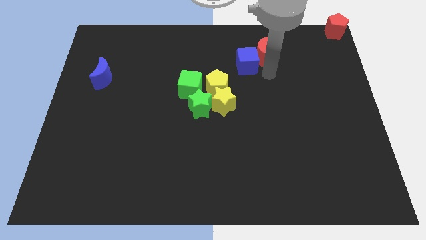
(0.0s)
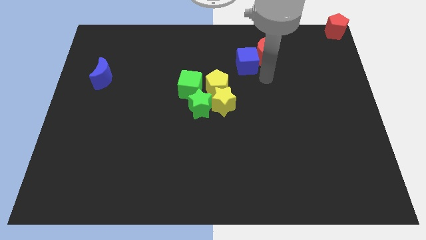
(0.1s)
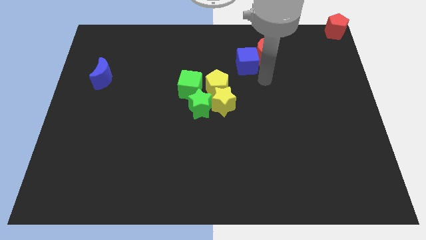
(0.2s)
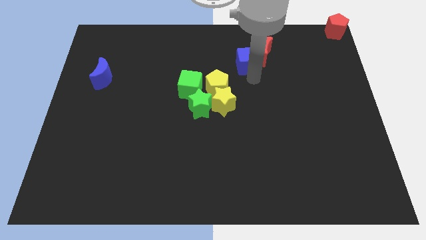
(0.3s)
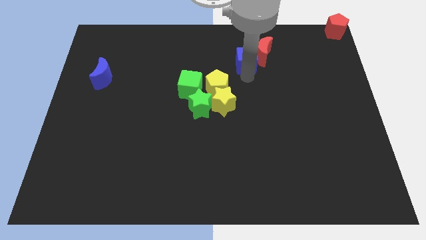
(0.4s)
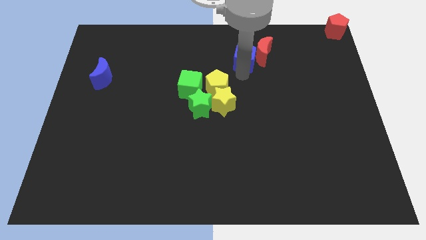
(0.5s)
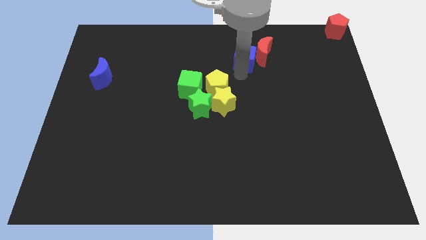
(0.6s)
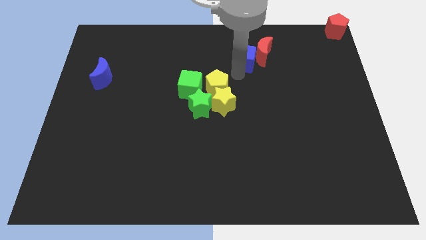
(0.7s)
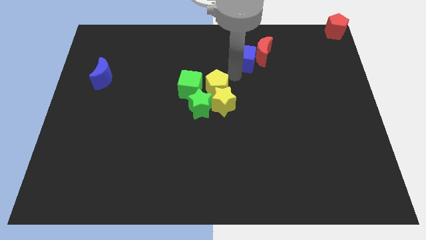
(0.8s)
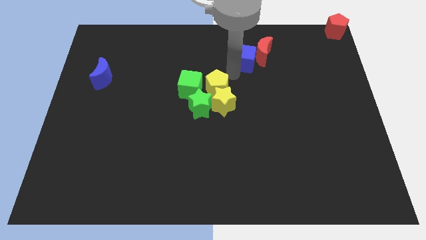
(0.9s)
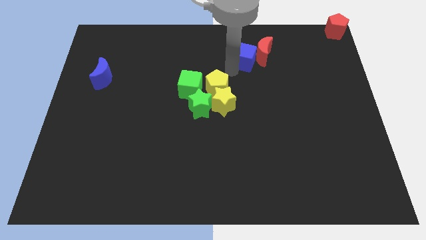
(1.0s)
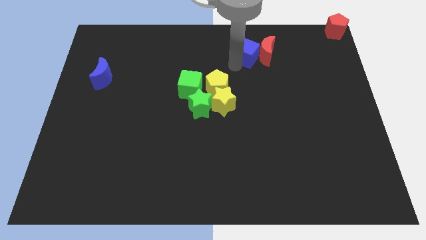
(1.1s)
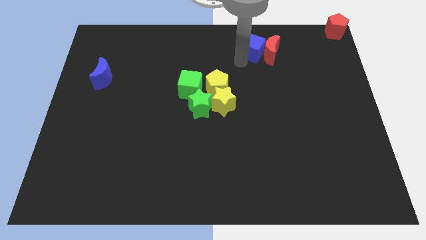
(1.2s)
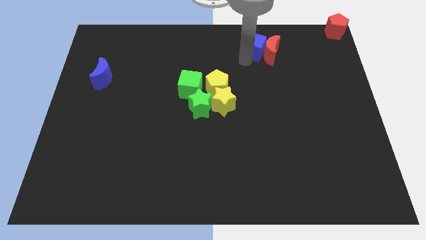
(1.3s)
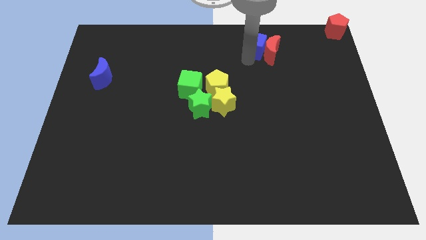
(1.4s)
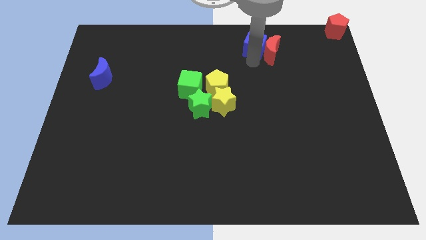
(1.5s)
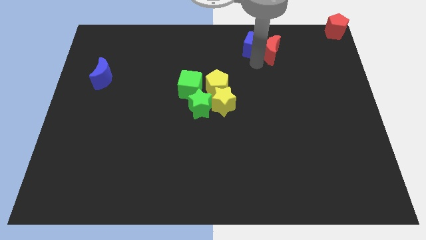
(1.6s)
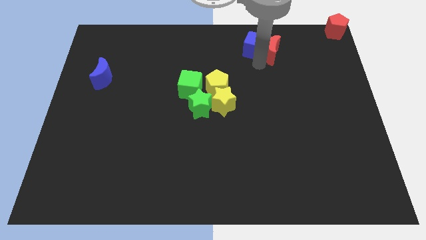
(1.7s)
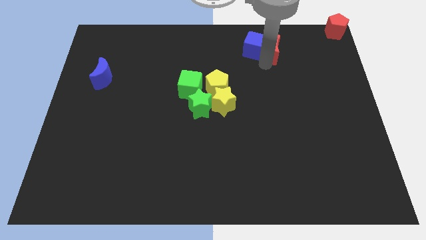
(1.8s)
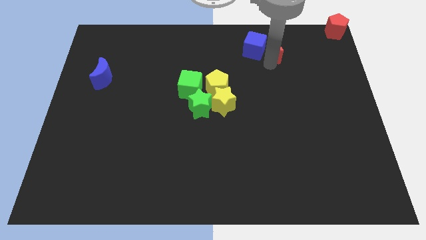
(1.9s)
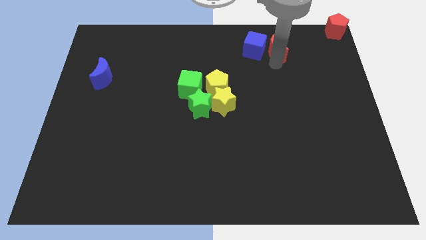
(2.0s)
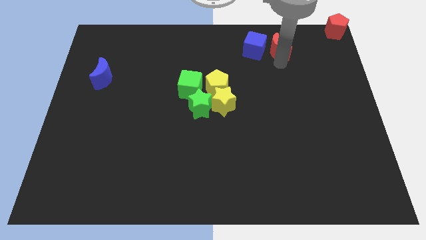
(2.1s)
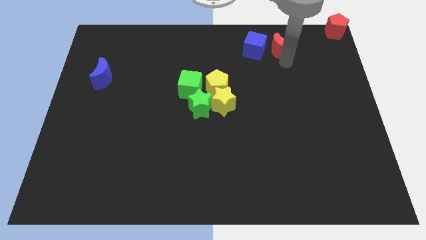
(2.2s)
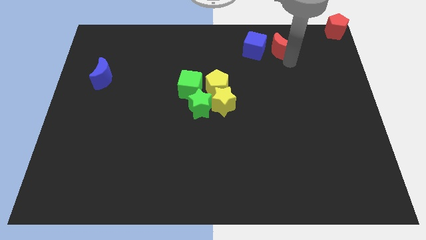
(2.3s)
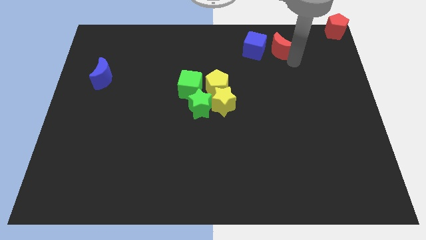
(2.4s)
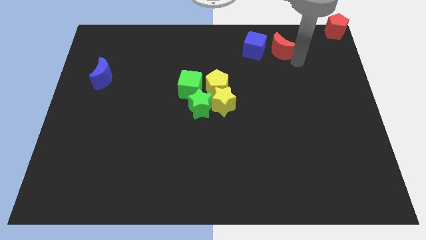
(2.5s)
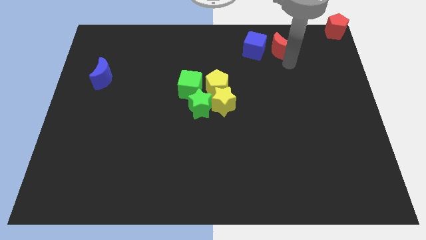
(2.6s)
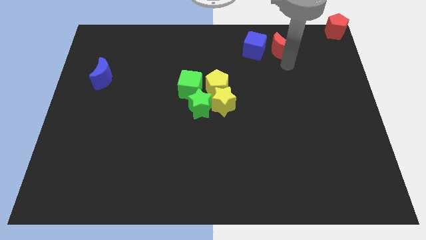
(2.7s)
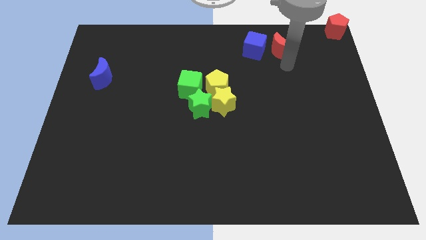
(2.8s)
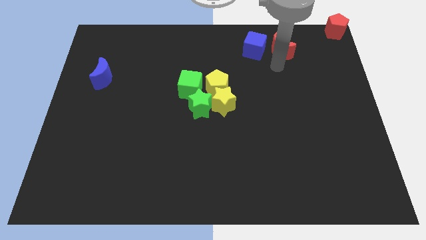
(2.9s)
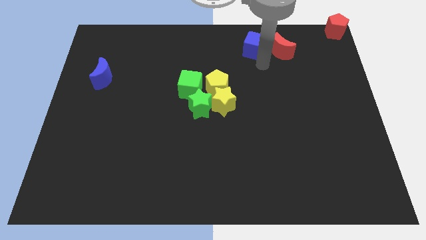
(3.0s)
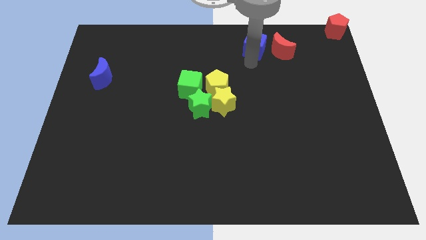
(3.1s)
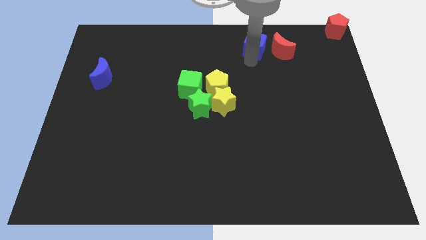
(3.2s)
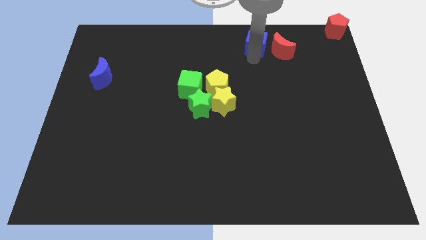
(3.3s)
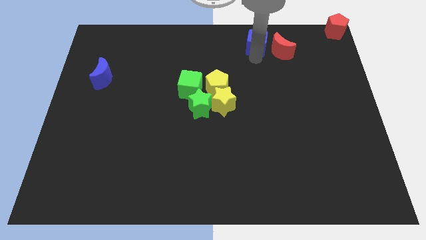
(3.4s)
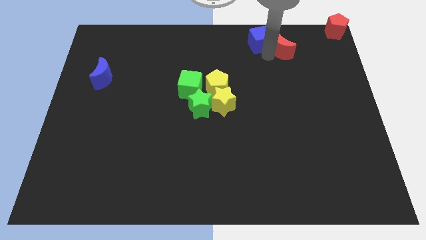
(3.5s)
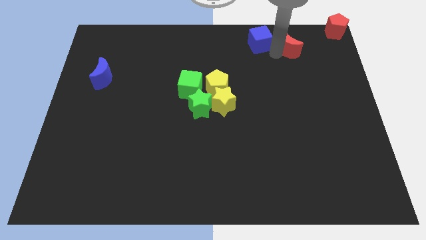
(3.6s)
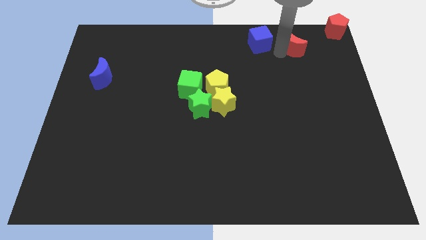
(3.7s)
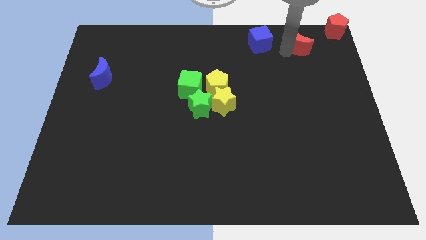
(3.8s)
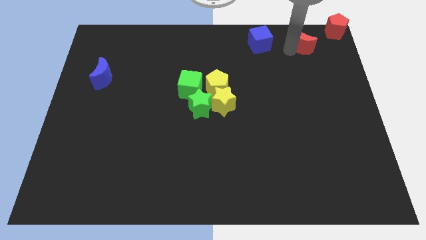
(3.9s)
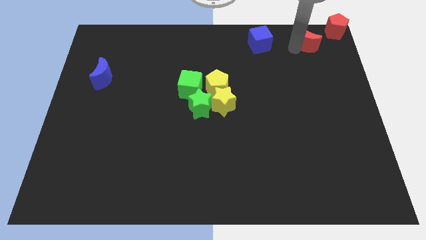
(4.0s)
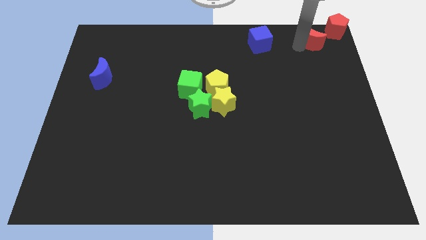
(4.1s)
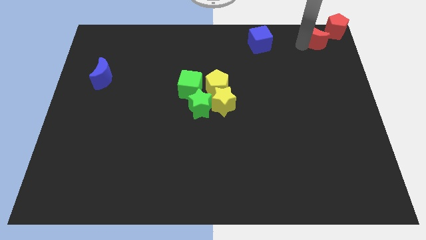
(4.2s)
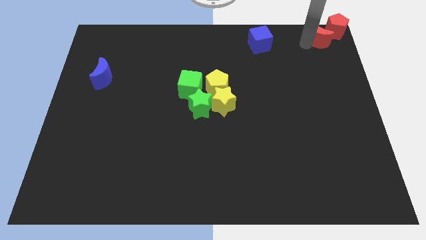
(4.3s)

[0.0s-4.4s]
move the red crescent into the red pentagon

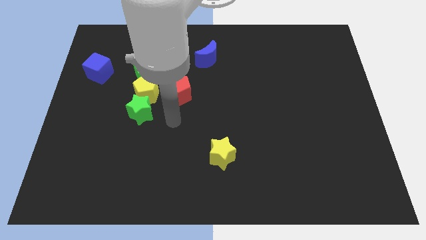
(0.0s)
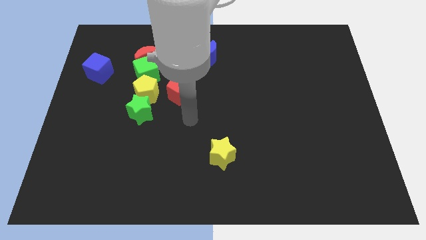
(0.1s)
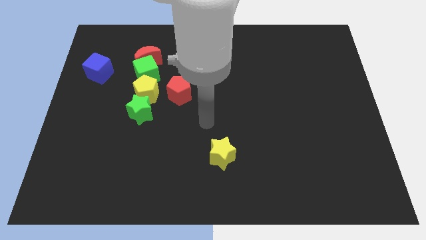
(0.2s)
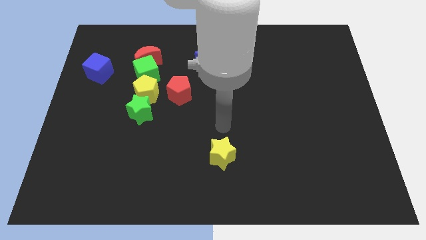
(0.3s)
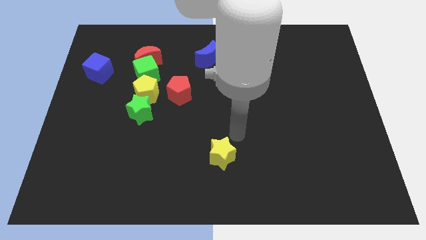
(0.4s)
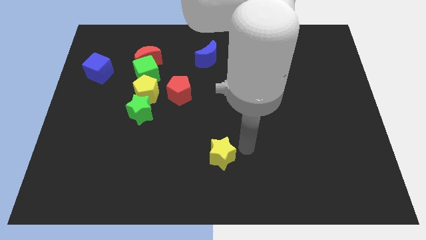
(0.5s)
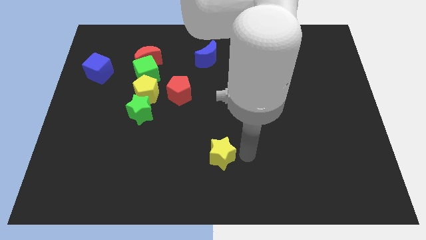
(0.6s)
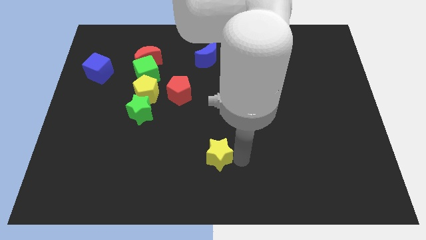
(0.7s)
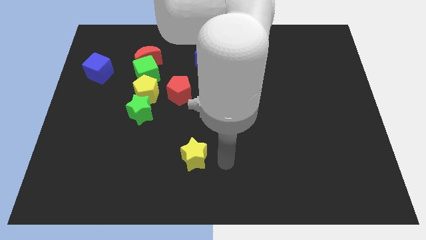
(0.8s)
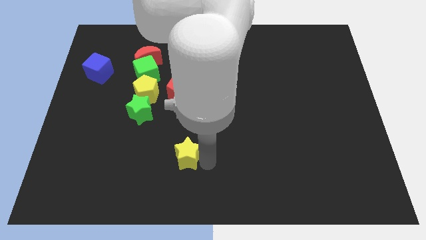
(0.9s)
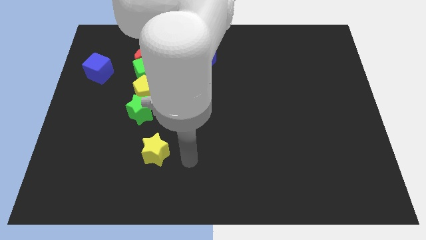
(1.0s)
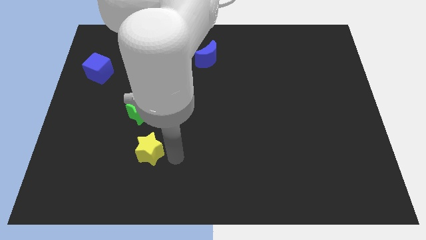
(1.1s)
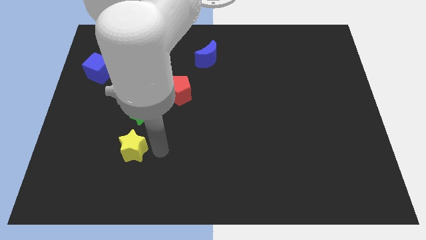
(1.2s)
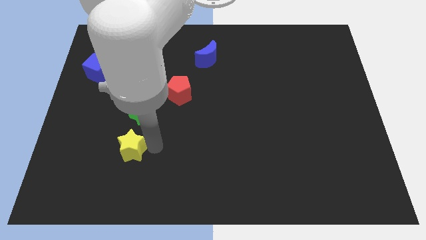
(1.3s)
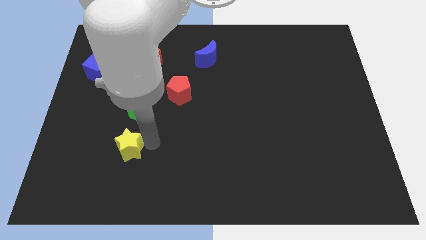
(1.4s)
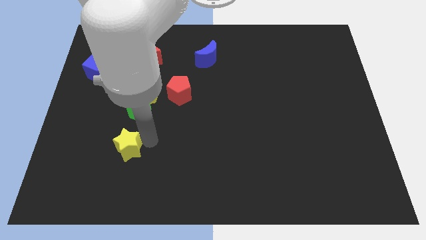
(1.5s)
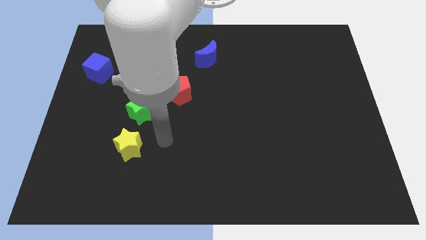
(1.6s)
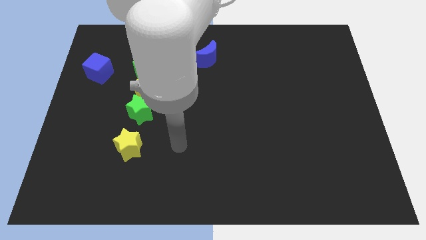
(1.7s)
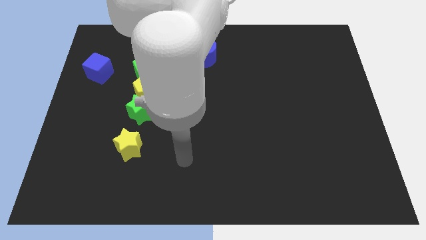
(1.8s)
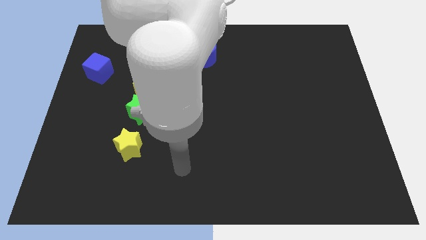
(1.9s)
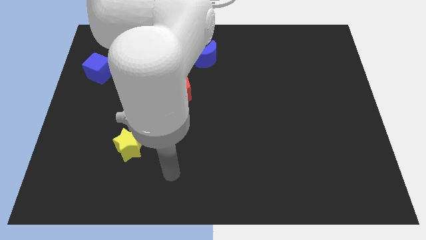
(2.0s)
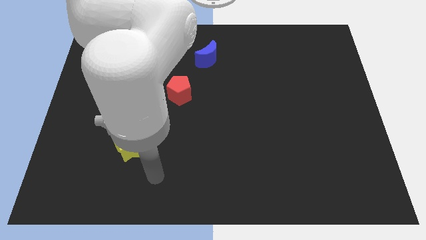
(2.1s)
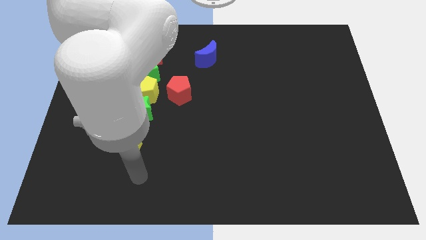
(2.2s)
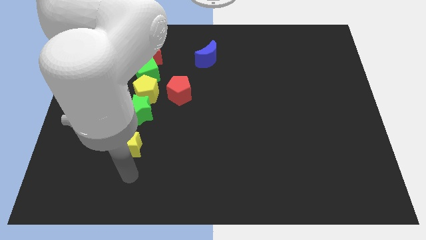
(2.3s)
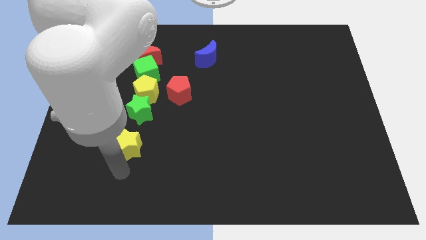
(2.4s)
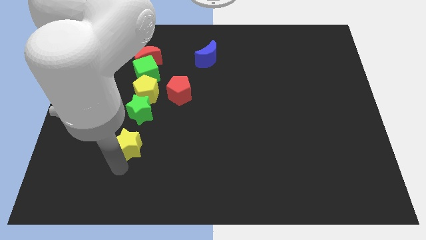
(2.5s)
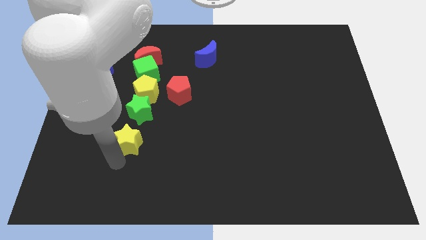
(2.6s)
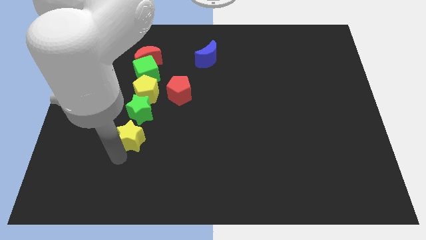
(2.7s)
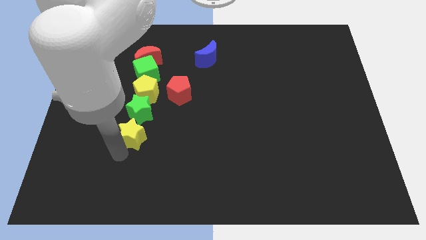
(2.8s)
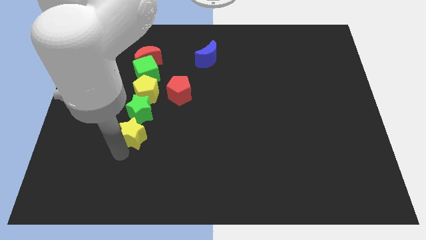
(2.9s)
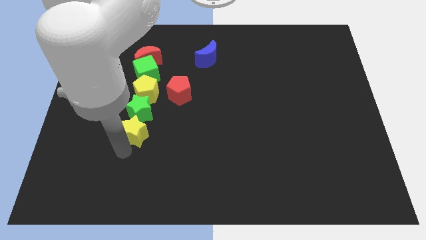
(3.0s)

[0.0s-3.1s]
slide yellow star close to green star

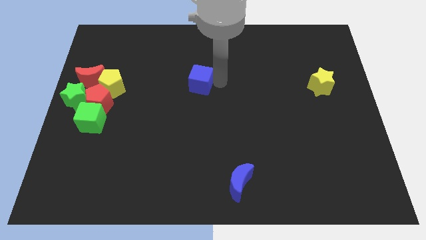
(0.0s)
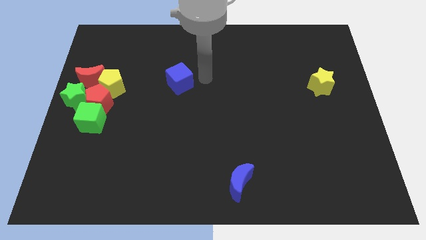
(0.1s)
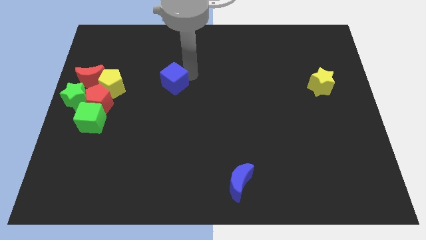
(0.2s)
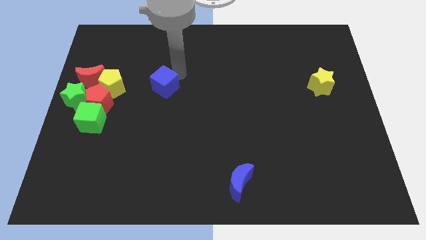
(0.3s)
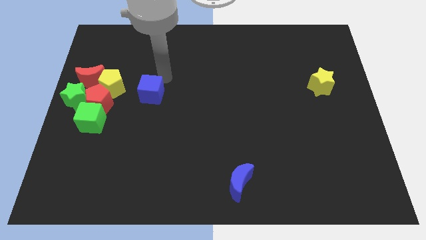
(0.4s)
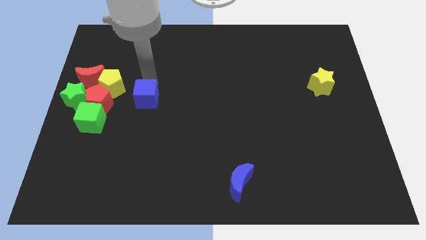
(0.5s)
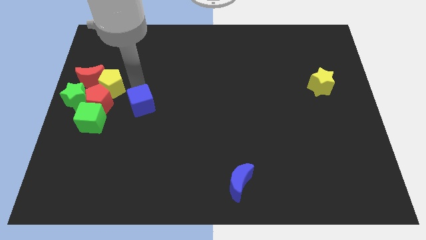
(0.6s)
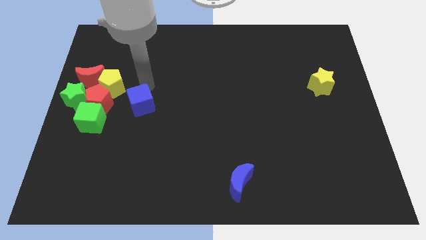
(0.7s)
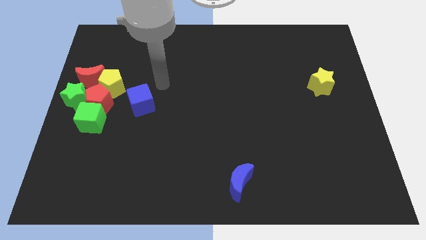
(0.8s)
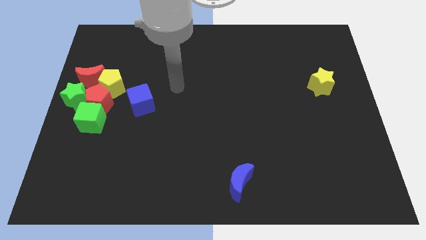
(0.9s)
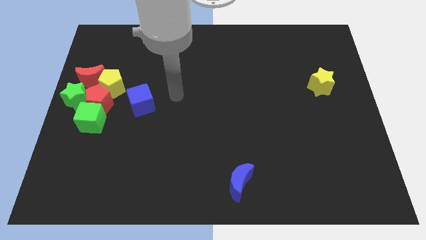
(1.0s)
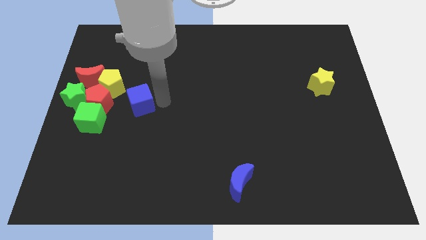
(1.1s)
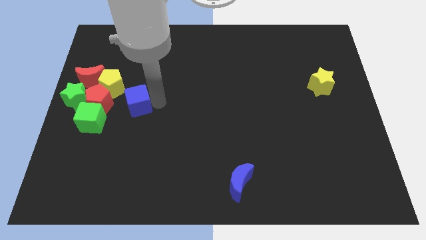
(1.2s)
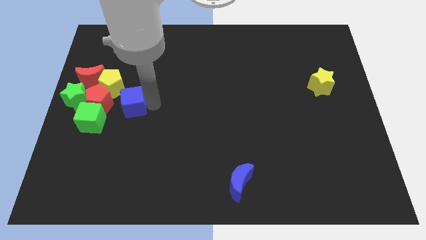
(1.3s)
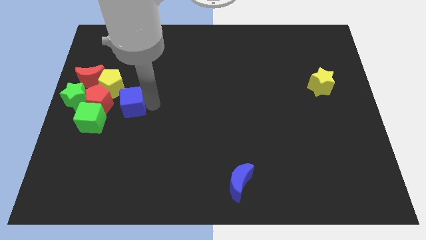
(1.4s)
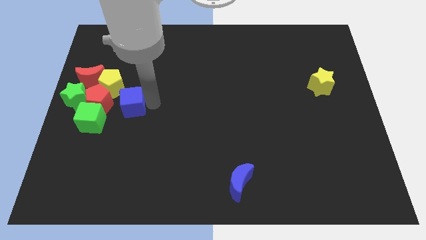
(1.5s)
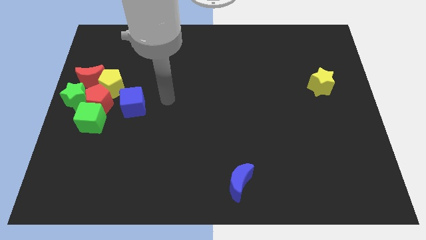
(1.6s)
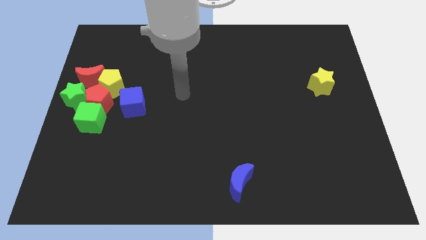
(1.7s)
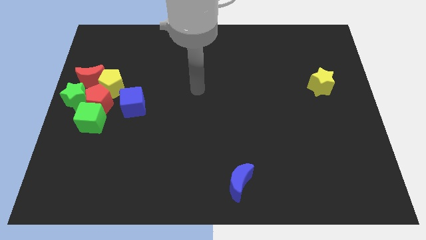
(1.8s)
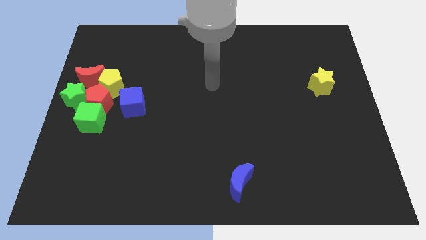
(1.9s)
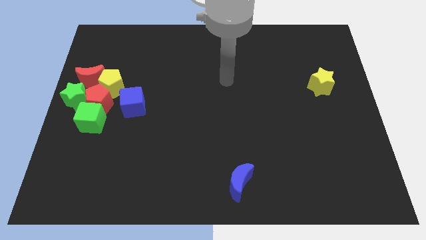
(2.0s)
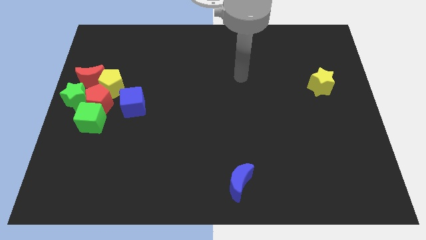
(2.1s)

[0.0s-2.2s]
push the blue cube towards to the right side of the red pentagon
